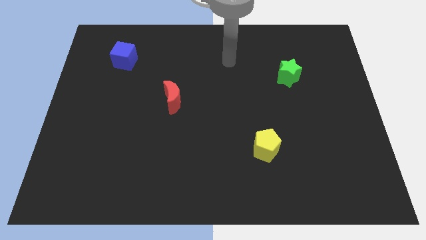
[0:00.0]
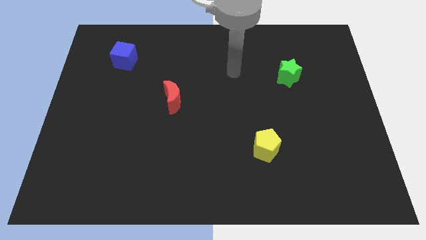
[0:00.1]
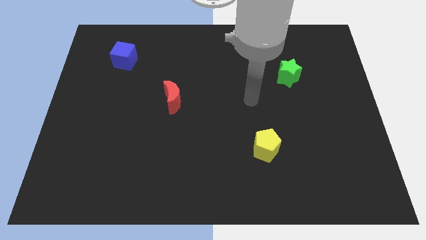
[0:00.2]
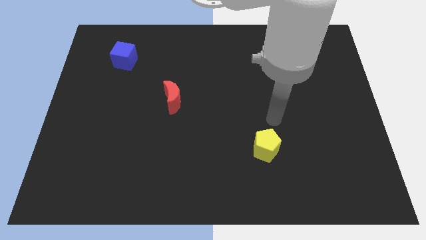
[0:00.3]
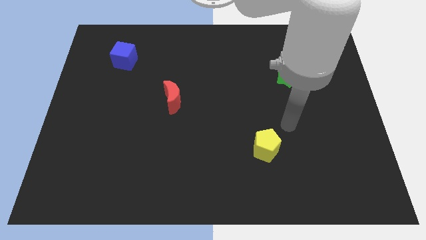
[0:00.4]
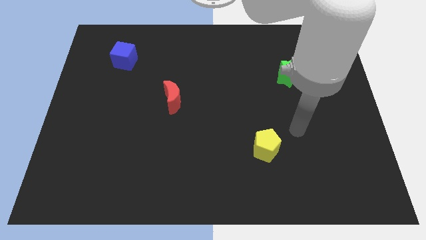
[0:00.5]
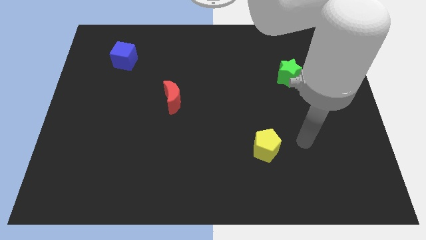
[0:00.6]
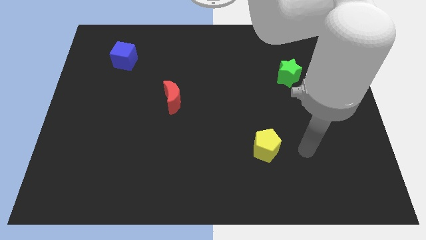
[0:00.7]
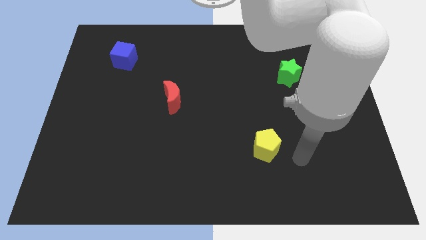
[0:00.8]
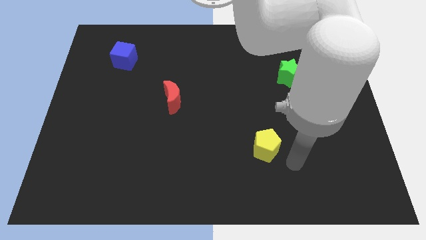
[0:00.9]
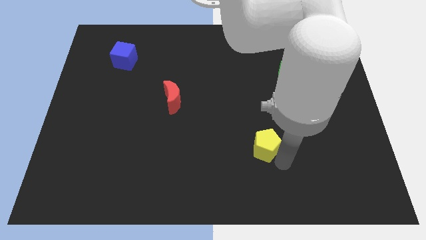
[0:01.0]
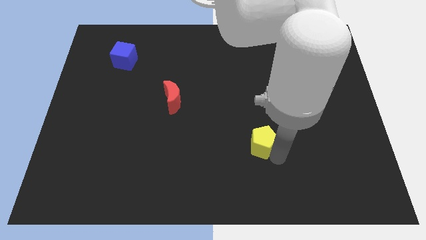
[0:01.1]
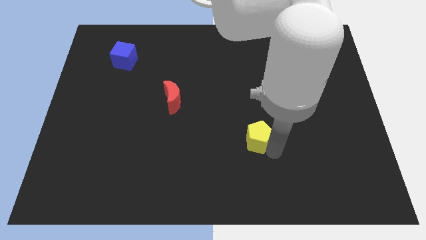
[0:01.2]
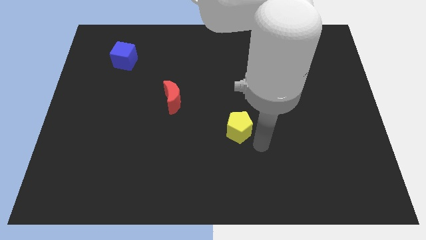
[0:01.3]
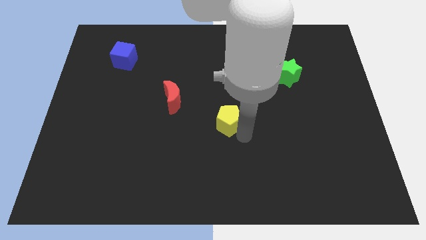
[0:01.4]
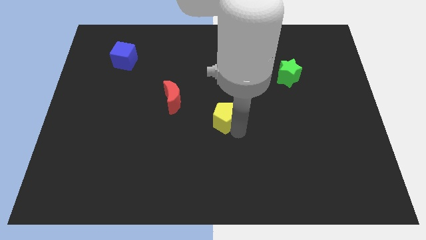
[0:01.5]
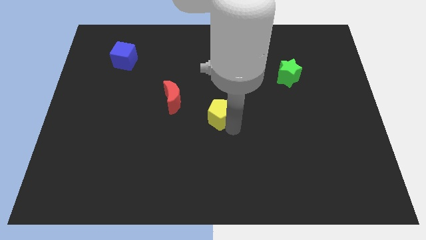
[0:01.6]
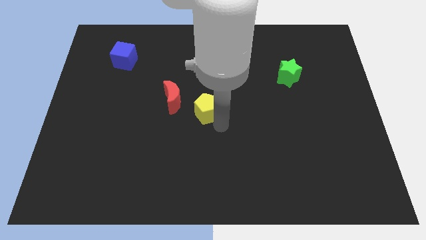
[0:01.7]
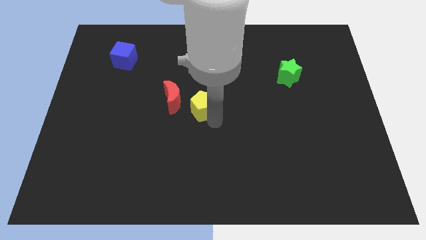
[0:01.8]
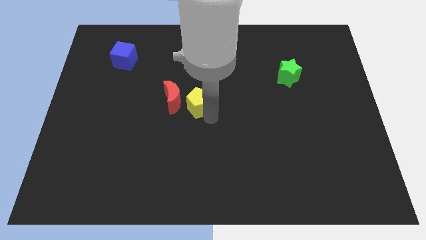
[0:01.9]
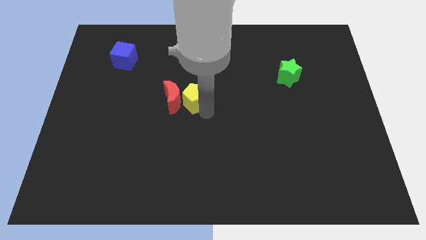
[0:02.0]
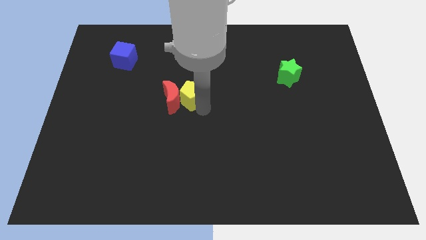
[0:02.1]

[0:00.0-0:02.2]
put the pentagon next to the moon

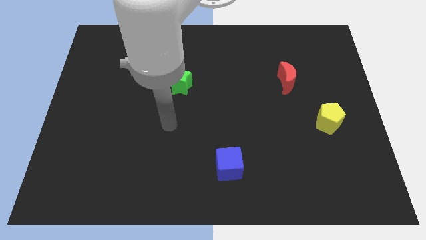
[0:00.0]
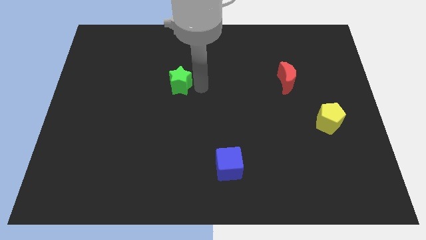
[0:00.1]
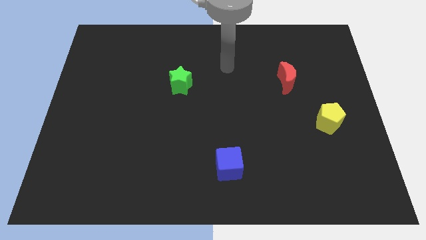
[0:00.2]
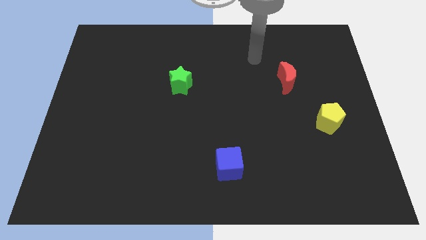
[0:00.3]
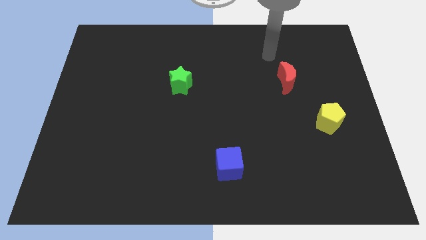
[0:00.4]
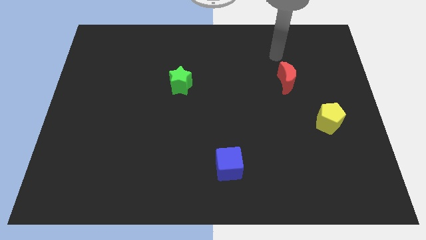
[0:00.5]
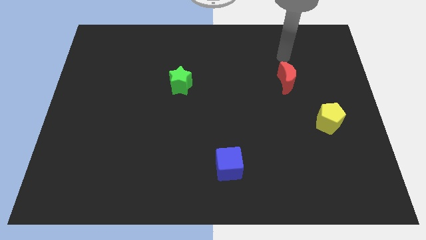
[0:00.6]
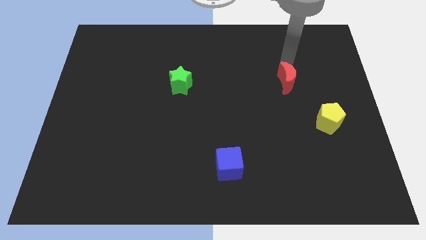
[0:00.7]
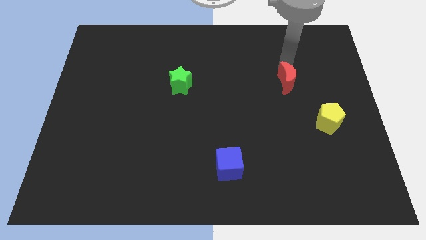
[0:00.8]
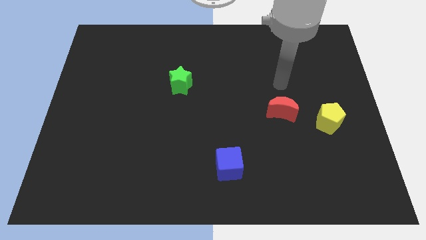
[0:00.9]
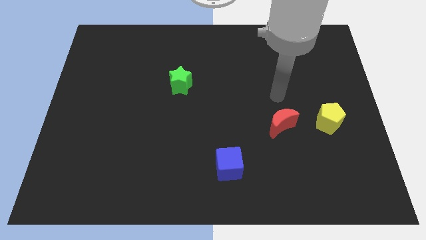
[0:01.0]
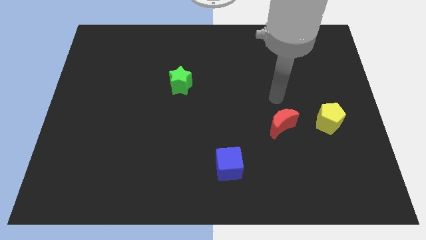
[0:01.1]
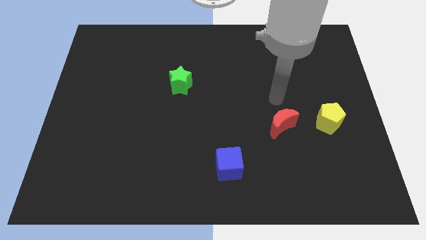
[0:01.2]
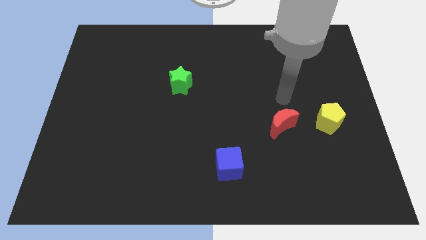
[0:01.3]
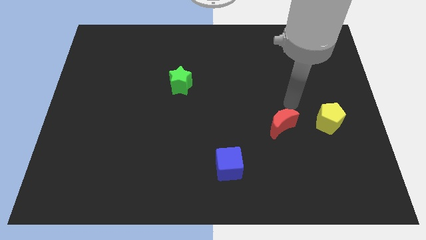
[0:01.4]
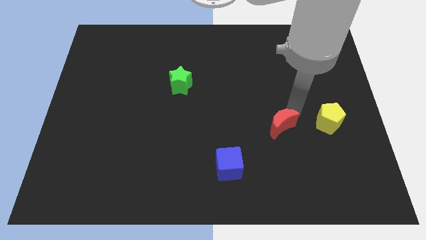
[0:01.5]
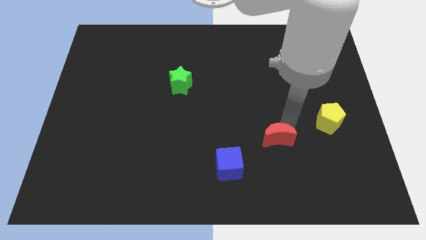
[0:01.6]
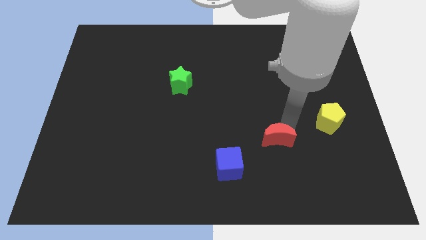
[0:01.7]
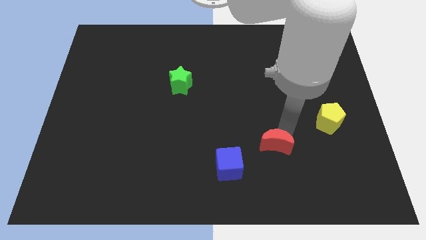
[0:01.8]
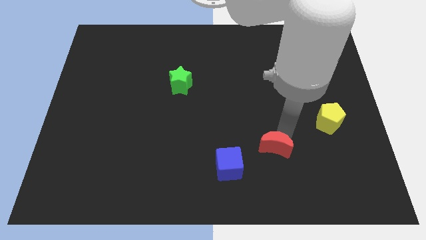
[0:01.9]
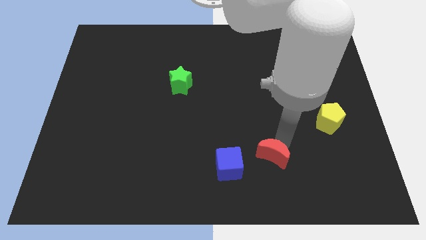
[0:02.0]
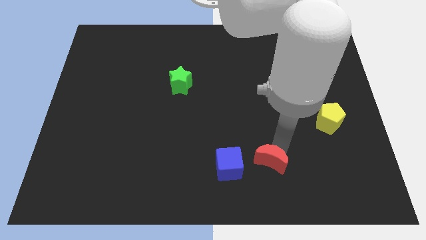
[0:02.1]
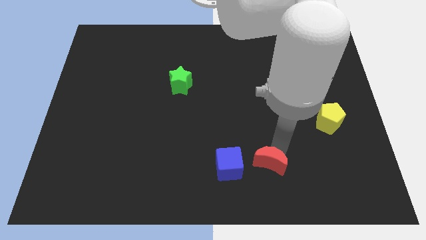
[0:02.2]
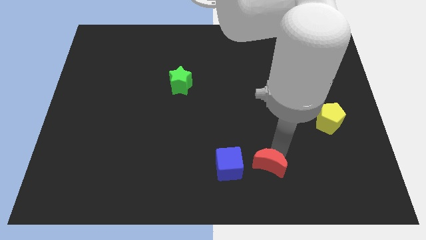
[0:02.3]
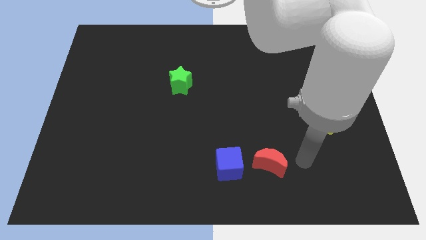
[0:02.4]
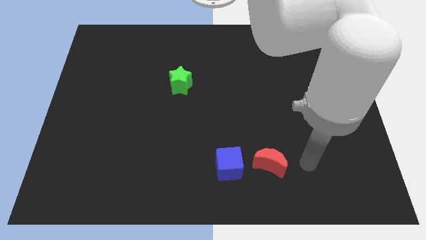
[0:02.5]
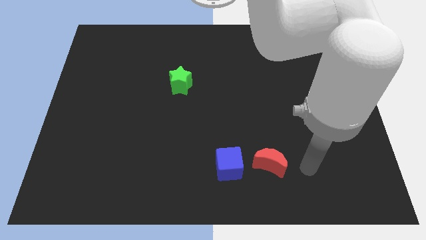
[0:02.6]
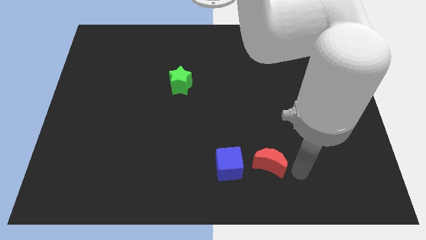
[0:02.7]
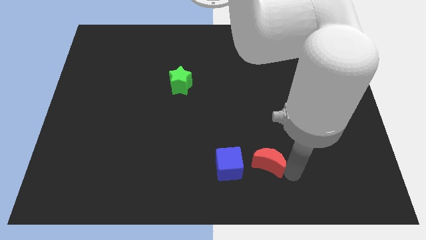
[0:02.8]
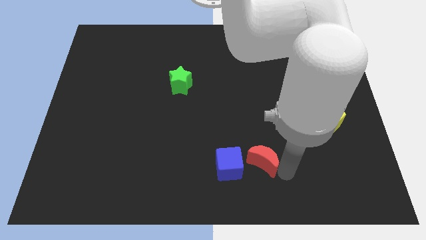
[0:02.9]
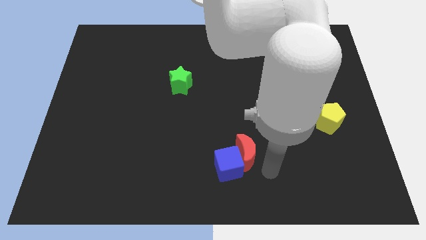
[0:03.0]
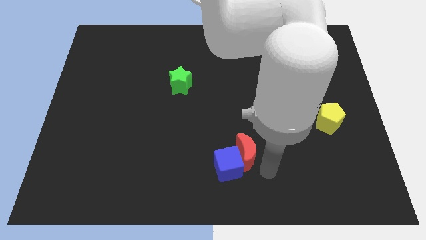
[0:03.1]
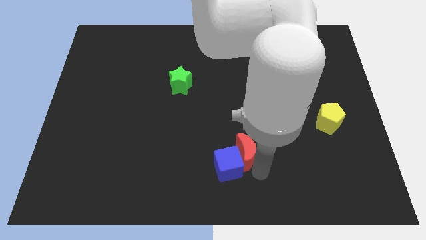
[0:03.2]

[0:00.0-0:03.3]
move the red block towards the cube

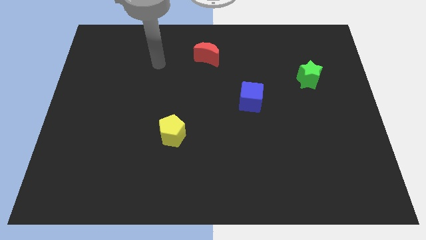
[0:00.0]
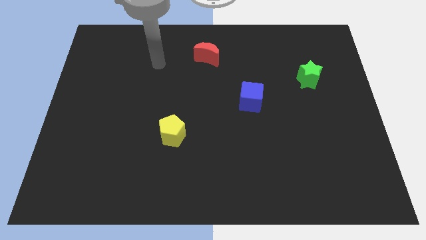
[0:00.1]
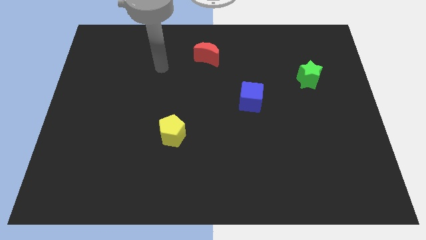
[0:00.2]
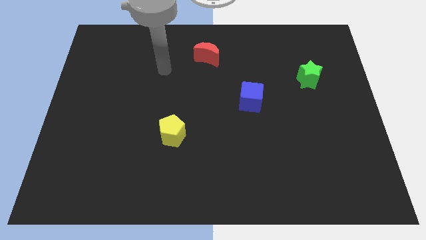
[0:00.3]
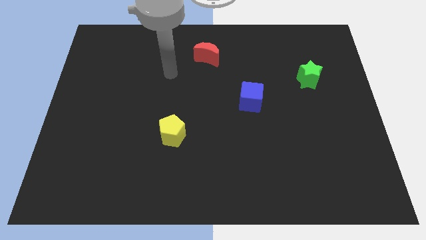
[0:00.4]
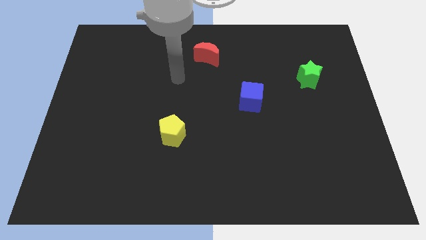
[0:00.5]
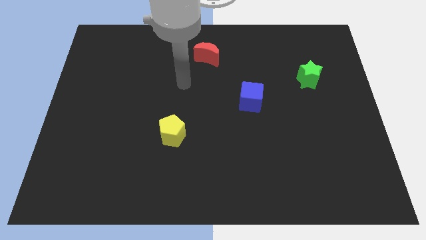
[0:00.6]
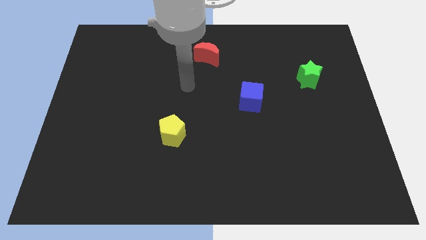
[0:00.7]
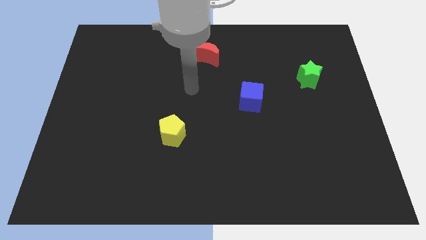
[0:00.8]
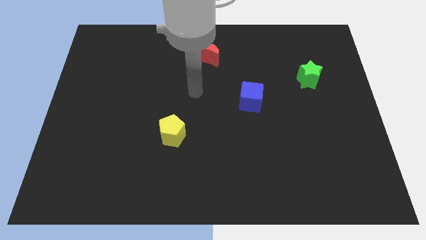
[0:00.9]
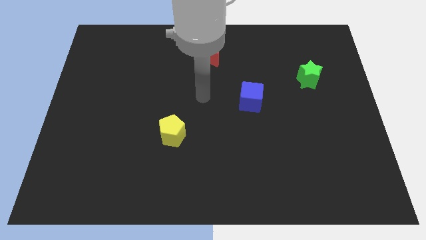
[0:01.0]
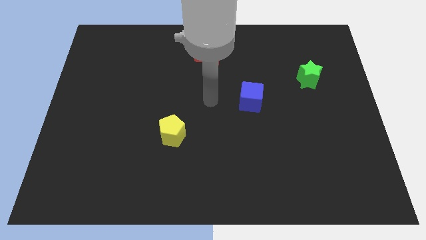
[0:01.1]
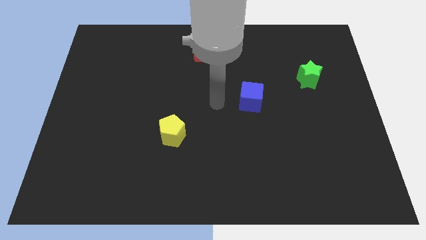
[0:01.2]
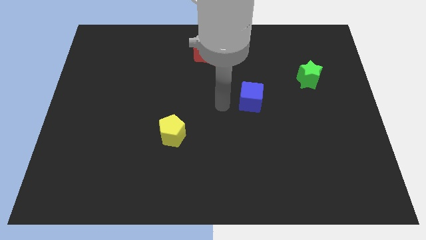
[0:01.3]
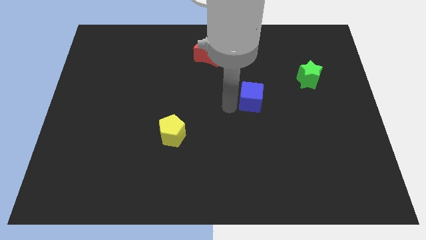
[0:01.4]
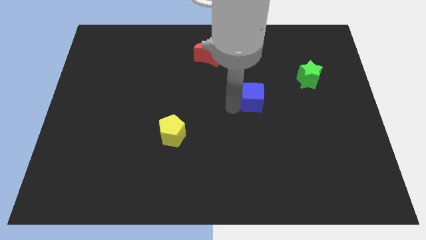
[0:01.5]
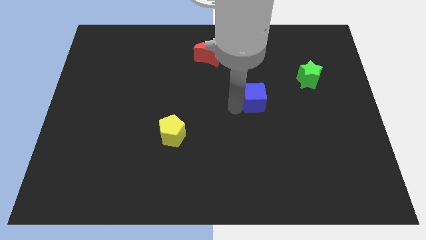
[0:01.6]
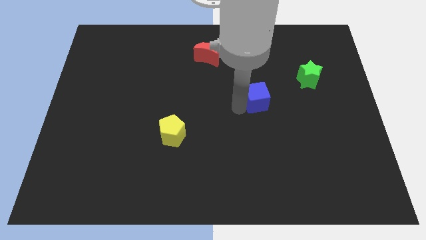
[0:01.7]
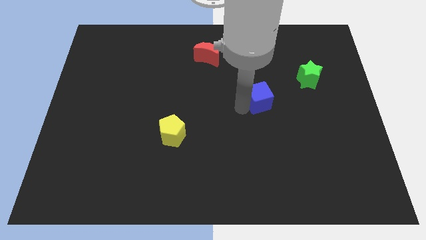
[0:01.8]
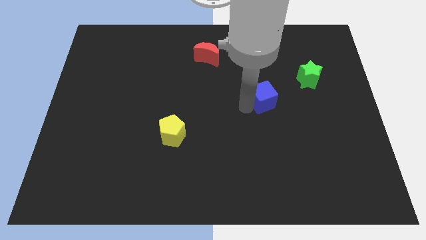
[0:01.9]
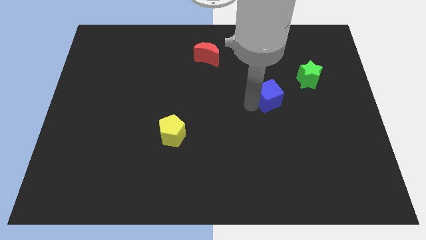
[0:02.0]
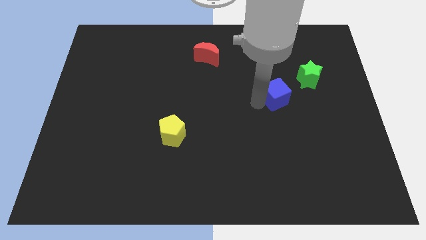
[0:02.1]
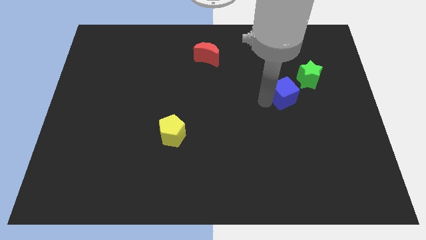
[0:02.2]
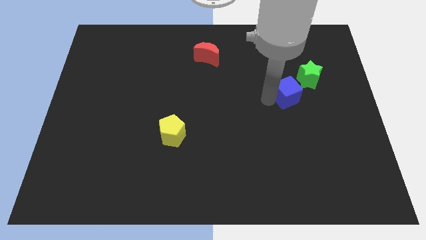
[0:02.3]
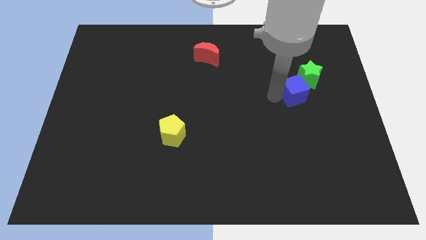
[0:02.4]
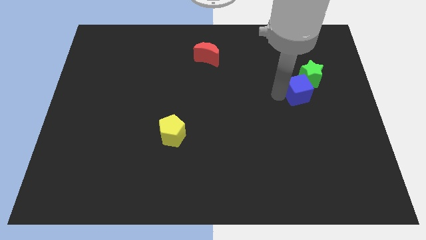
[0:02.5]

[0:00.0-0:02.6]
move the cube next to the green block

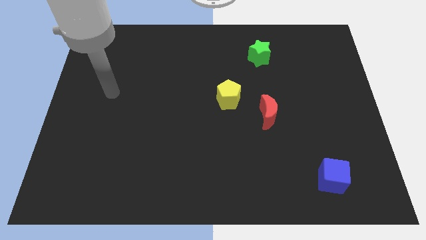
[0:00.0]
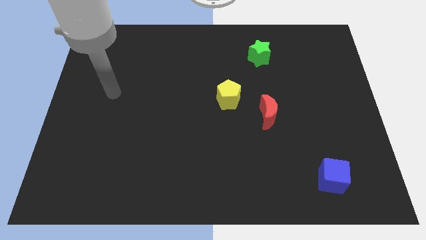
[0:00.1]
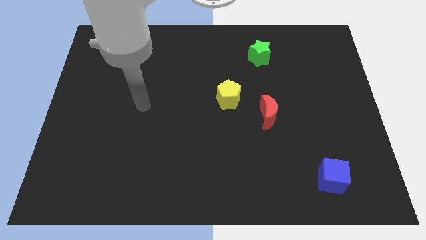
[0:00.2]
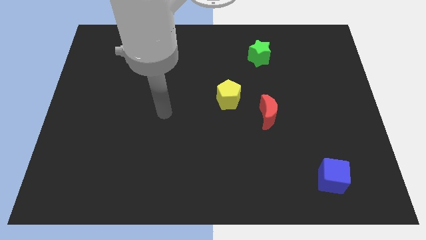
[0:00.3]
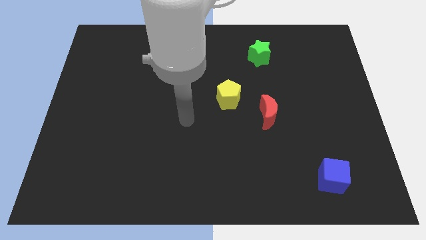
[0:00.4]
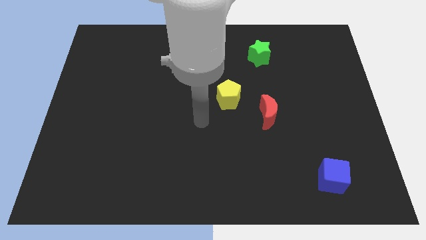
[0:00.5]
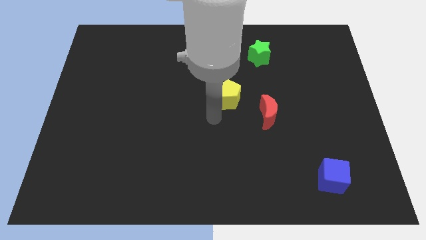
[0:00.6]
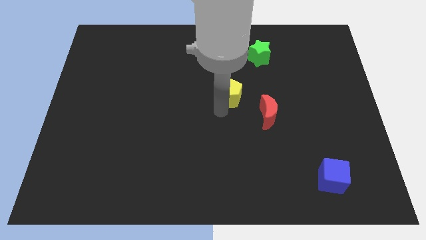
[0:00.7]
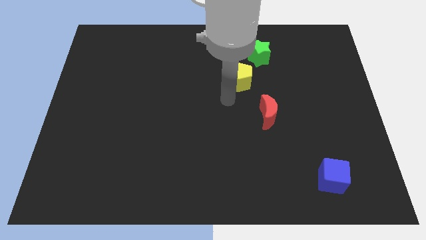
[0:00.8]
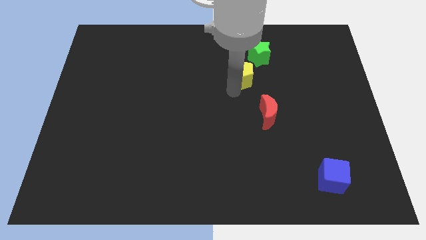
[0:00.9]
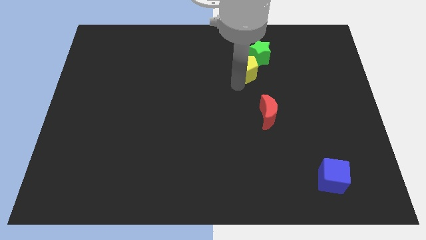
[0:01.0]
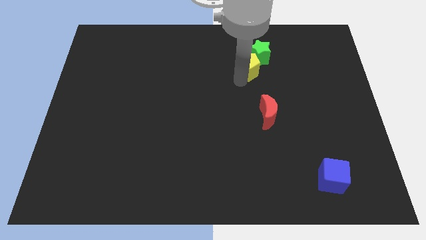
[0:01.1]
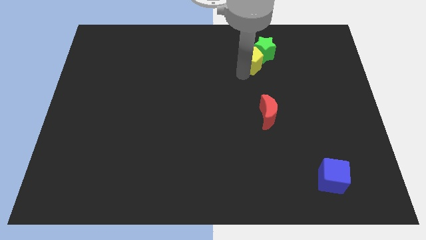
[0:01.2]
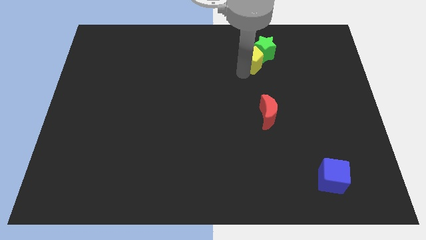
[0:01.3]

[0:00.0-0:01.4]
push the pentagon towards the star
